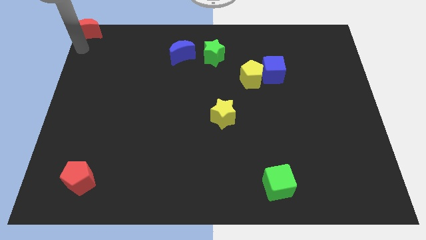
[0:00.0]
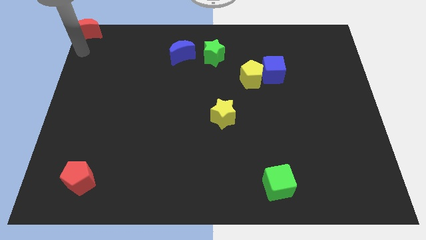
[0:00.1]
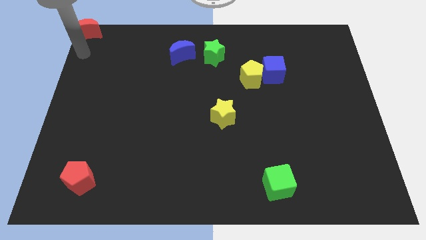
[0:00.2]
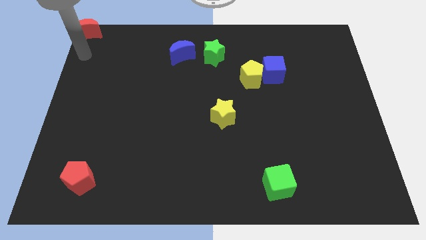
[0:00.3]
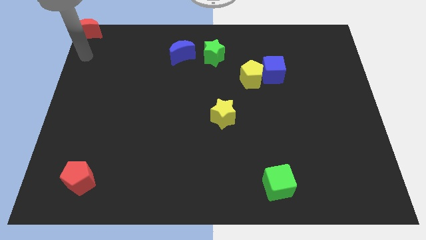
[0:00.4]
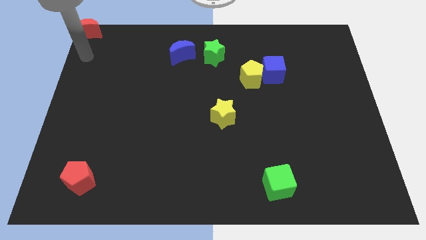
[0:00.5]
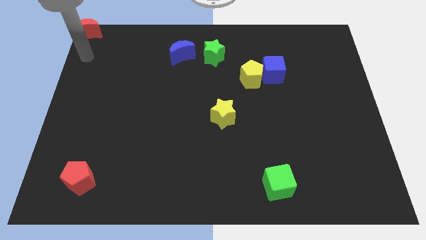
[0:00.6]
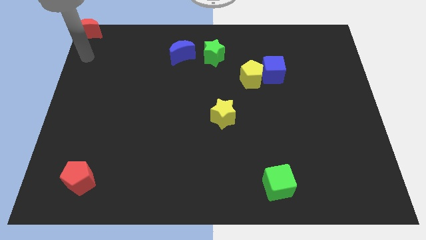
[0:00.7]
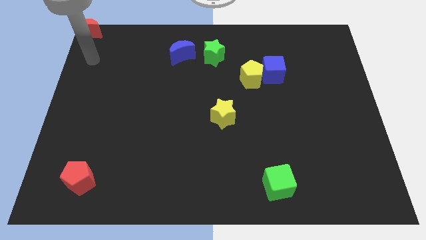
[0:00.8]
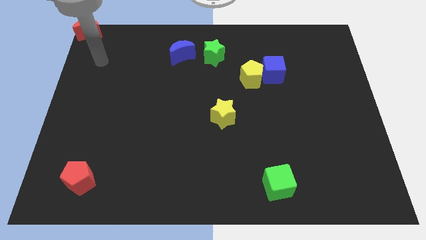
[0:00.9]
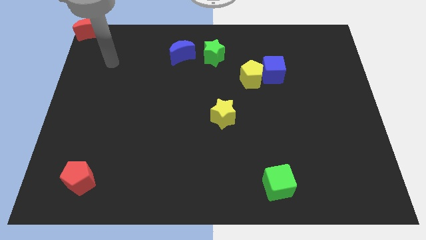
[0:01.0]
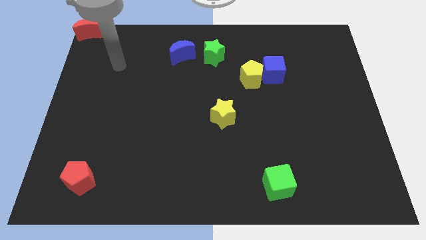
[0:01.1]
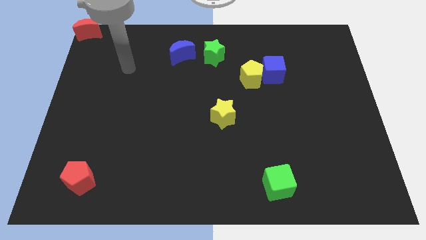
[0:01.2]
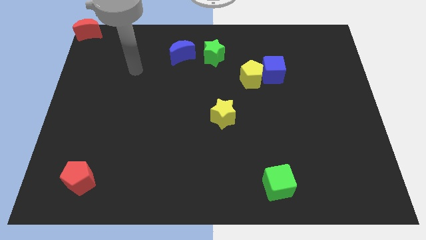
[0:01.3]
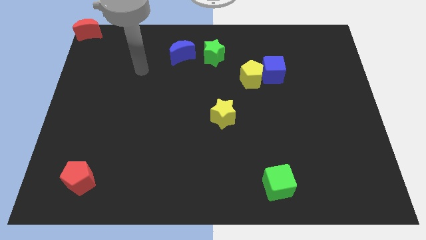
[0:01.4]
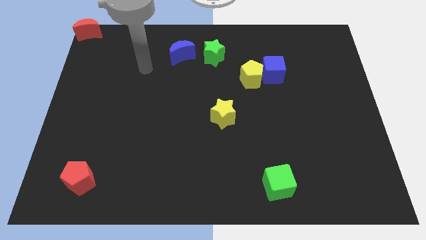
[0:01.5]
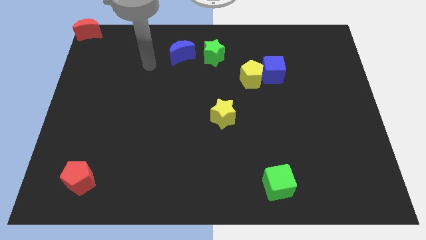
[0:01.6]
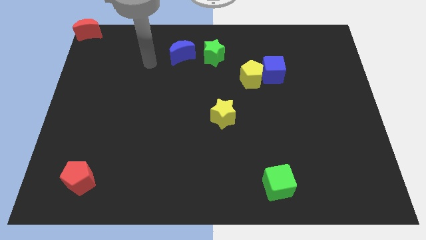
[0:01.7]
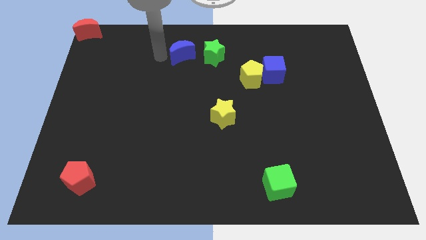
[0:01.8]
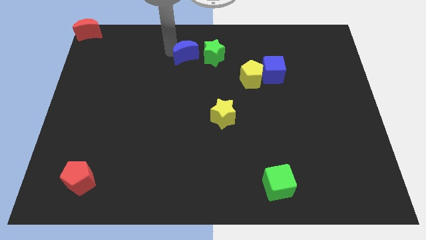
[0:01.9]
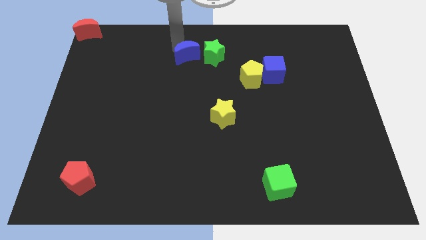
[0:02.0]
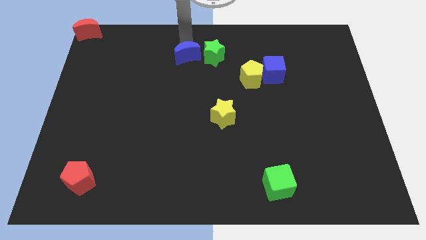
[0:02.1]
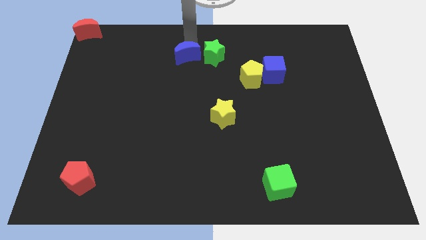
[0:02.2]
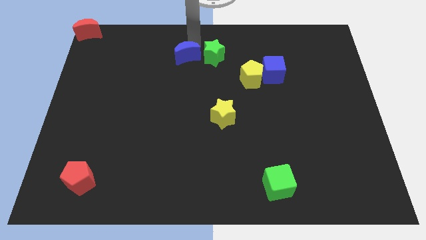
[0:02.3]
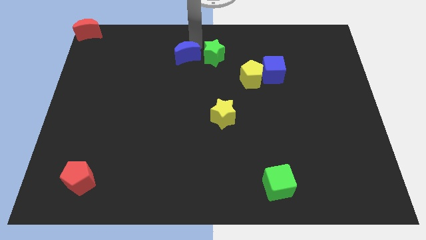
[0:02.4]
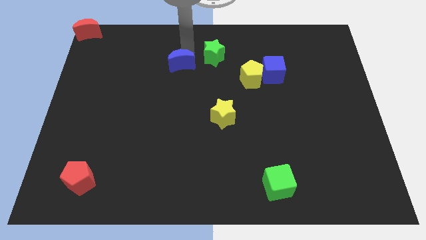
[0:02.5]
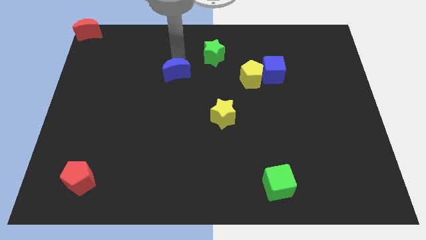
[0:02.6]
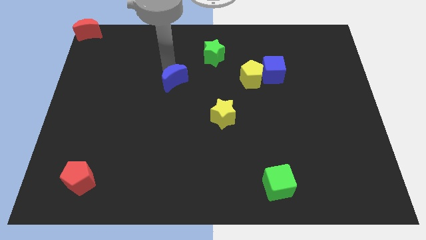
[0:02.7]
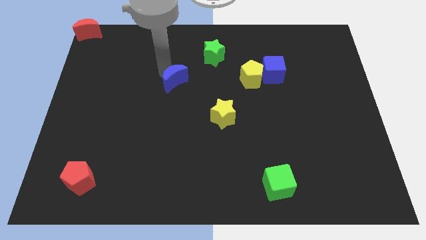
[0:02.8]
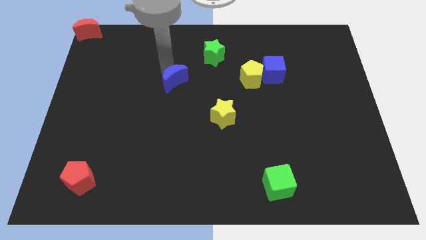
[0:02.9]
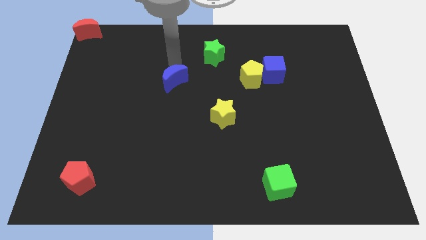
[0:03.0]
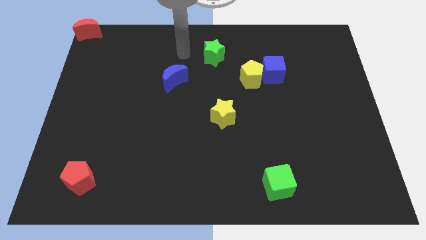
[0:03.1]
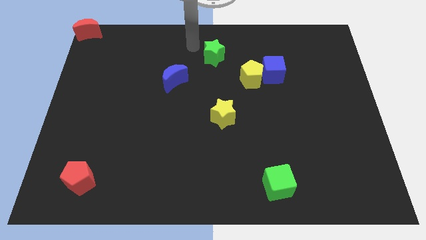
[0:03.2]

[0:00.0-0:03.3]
push the blue crescent to the bottom left of the green star

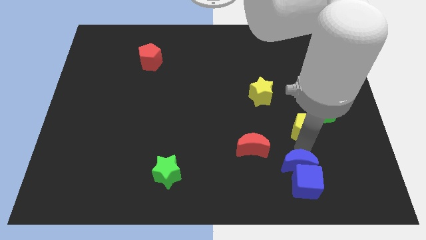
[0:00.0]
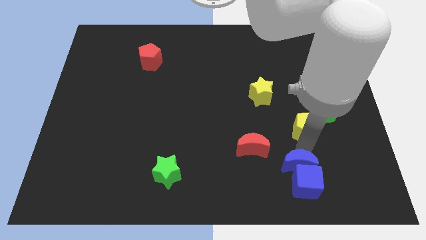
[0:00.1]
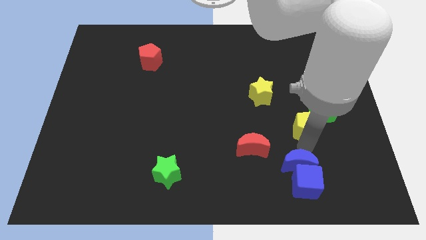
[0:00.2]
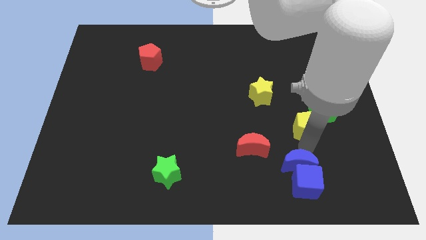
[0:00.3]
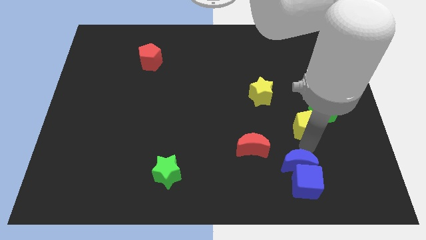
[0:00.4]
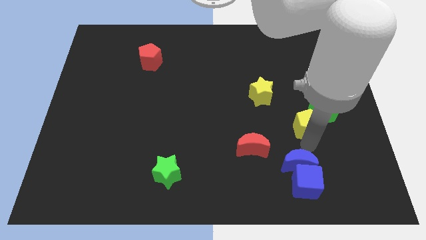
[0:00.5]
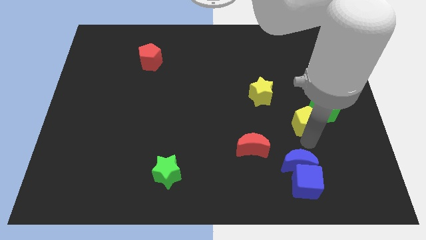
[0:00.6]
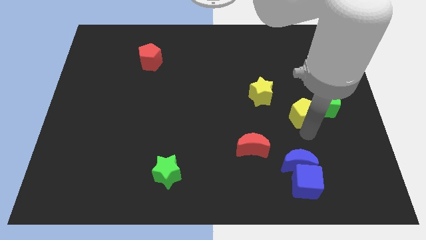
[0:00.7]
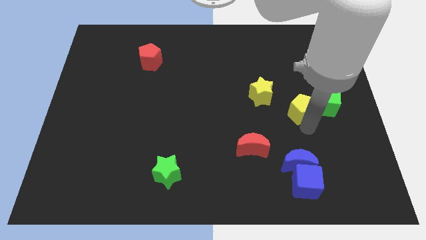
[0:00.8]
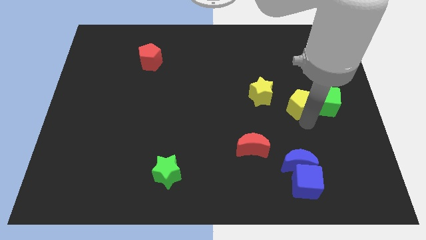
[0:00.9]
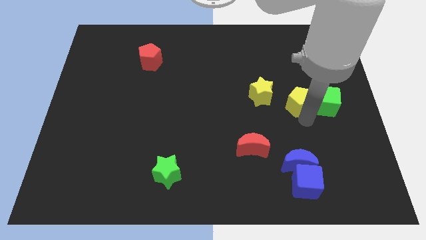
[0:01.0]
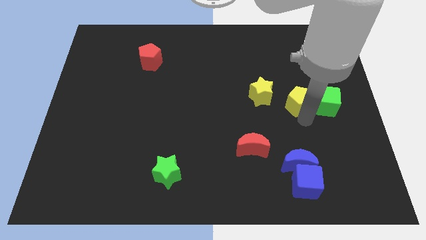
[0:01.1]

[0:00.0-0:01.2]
push the yellow pentagon slightly towards up

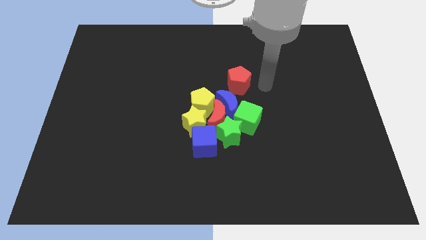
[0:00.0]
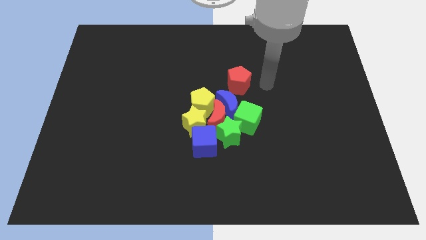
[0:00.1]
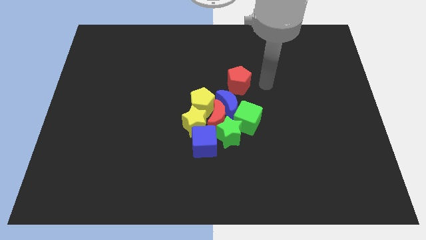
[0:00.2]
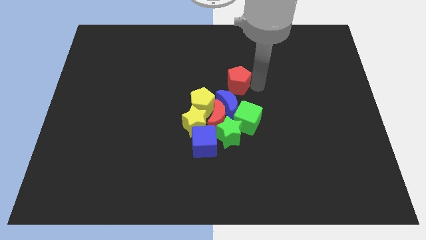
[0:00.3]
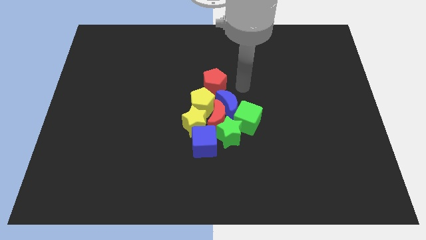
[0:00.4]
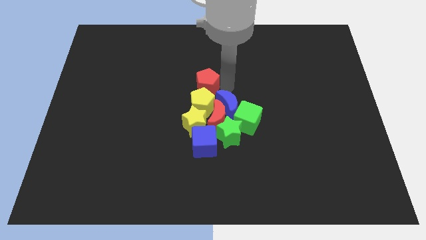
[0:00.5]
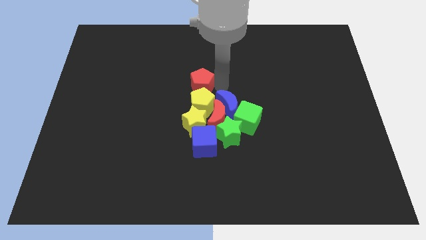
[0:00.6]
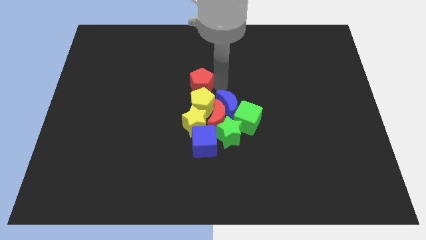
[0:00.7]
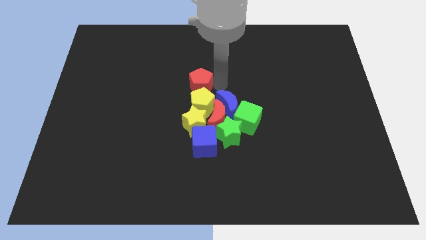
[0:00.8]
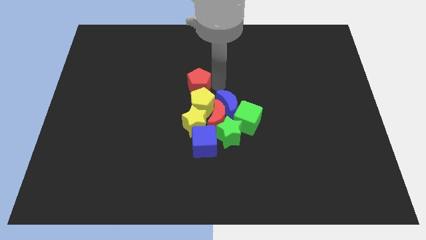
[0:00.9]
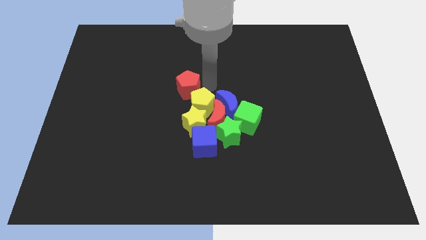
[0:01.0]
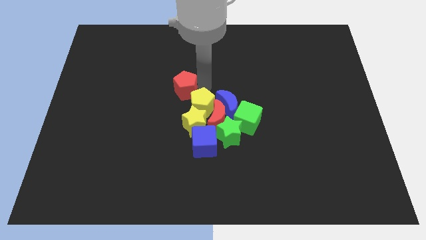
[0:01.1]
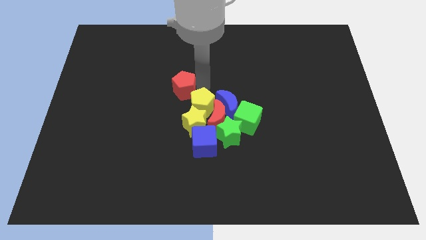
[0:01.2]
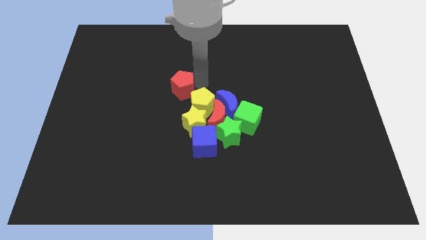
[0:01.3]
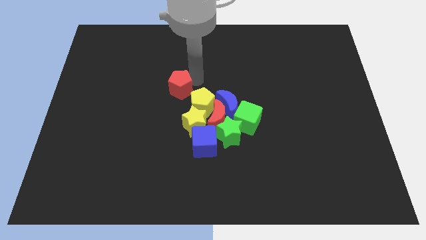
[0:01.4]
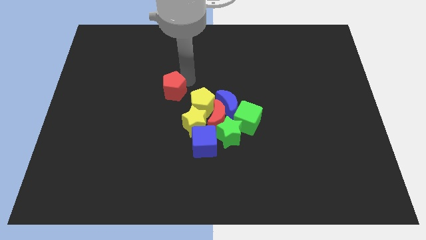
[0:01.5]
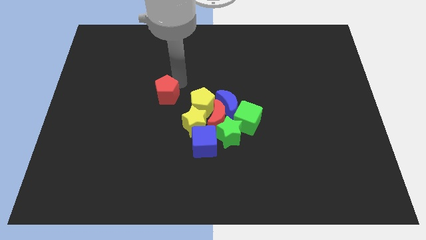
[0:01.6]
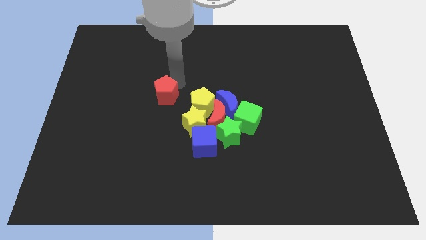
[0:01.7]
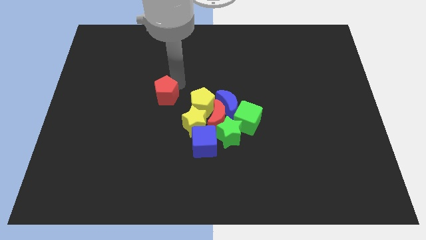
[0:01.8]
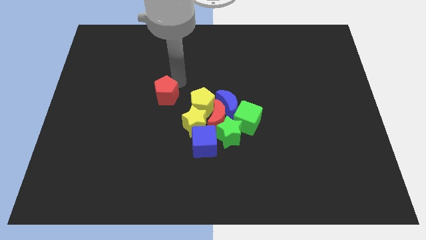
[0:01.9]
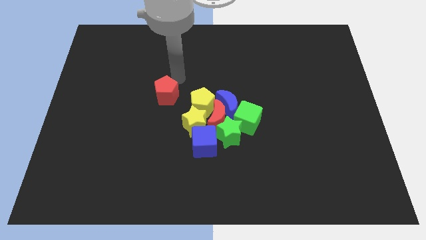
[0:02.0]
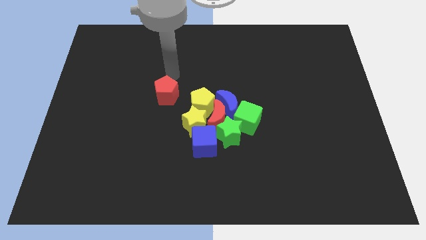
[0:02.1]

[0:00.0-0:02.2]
push the red pentagon to the left side of the board

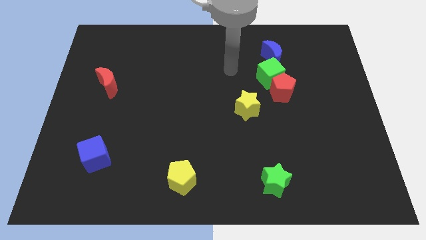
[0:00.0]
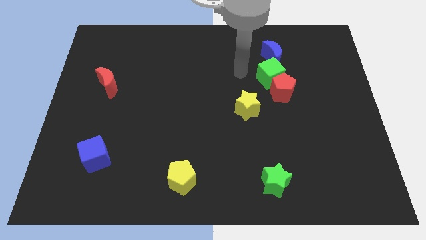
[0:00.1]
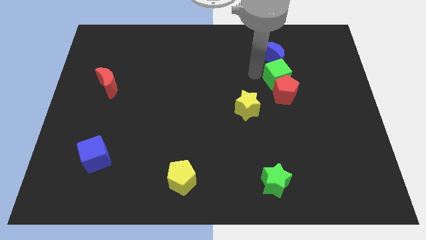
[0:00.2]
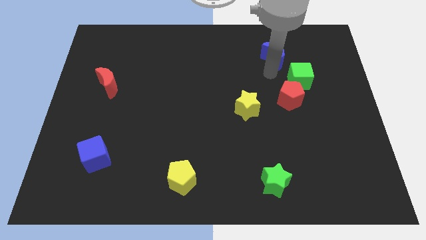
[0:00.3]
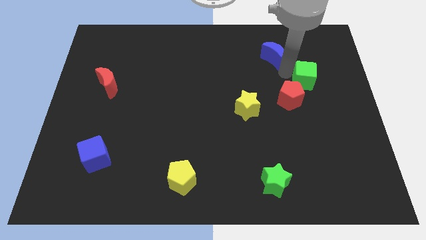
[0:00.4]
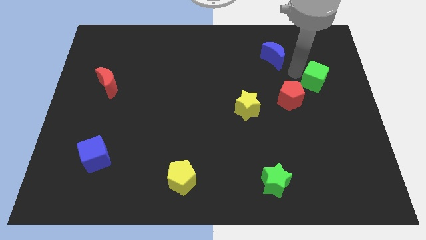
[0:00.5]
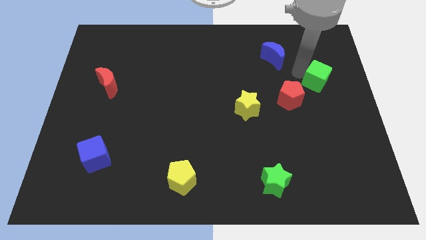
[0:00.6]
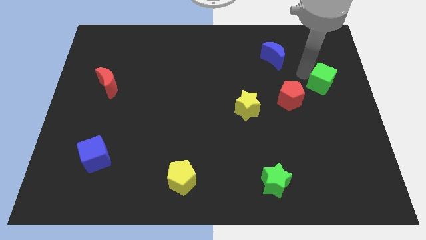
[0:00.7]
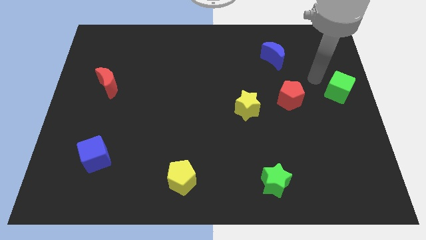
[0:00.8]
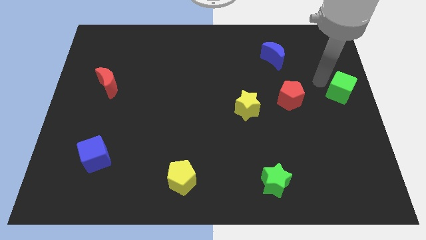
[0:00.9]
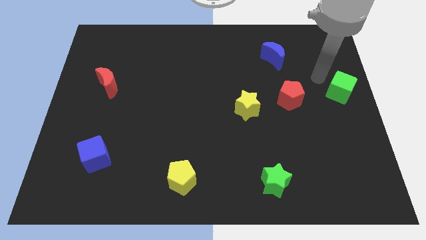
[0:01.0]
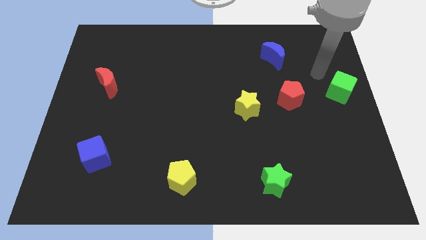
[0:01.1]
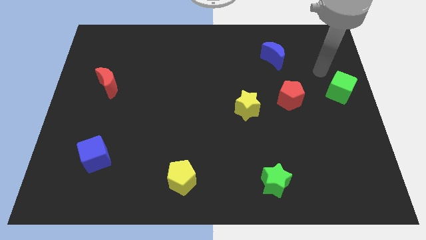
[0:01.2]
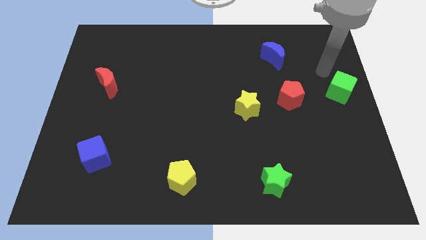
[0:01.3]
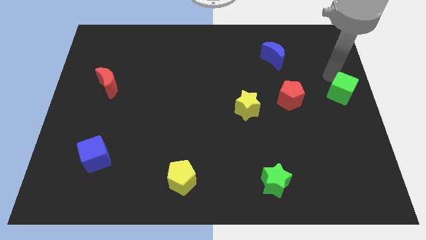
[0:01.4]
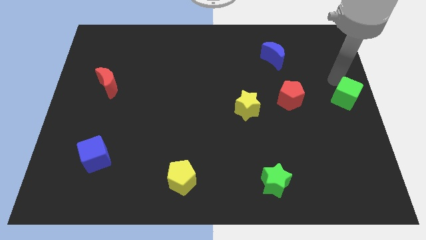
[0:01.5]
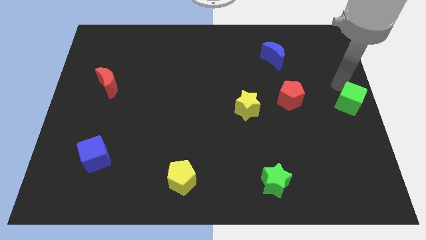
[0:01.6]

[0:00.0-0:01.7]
place the green cube right to the red pentagon

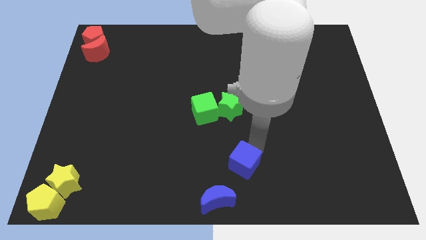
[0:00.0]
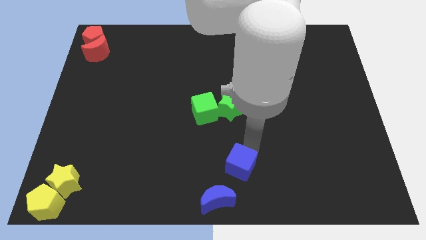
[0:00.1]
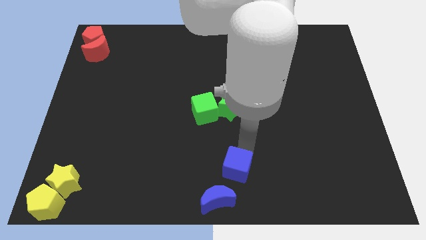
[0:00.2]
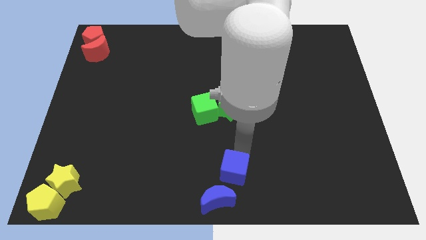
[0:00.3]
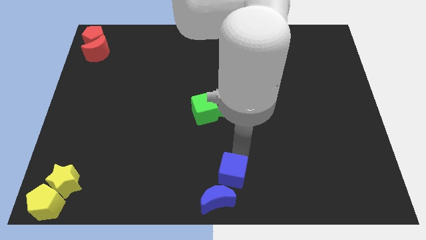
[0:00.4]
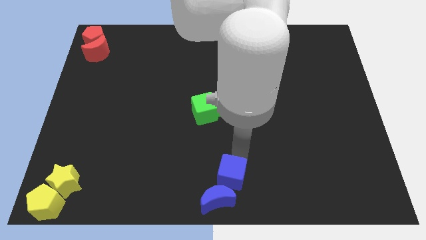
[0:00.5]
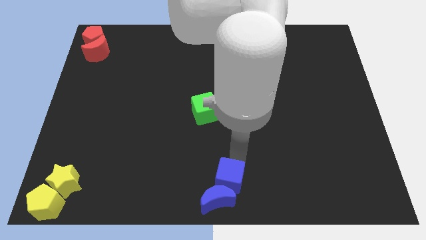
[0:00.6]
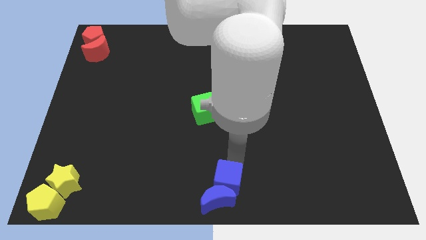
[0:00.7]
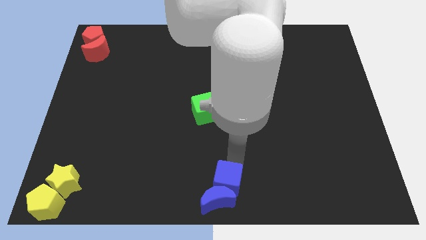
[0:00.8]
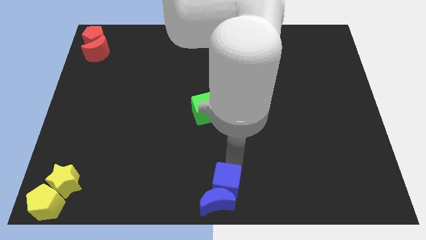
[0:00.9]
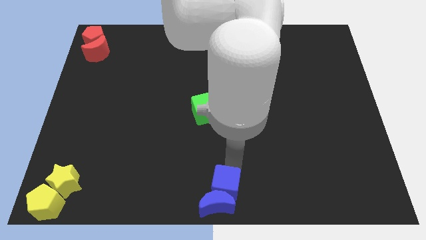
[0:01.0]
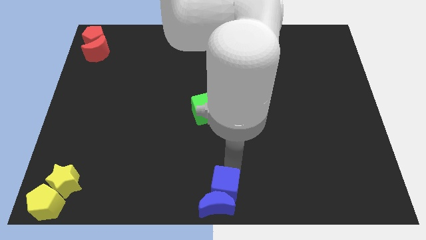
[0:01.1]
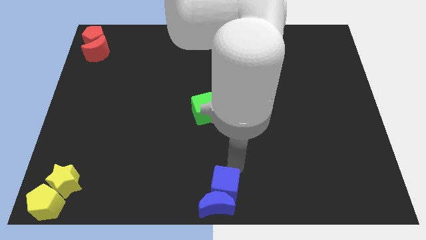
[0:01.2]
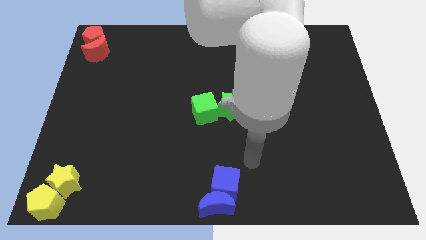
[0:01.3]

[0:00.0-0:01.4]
place the blue cube close to the blue crescent
